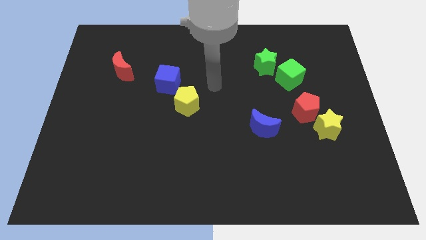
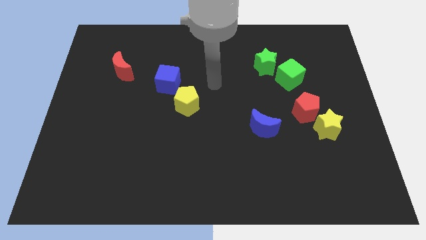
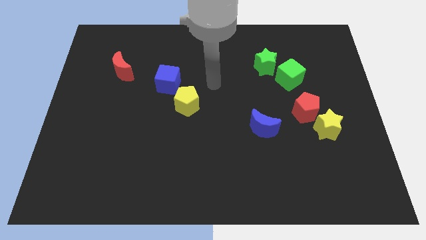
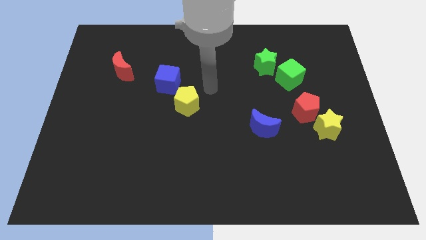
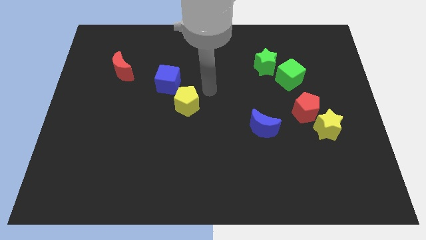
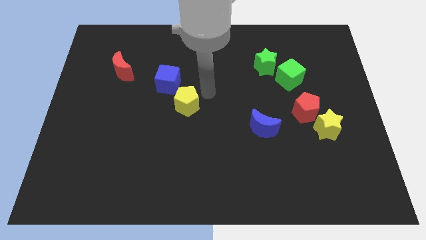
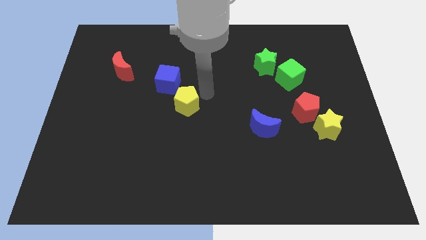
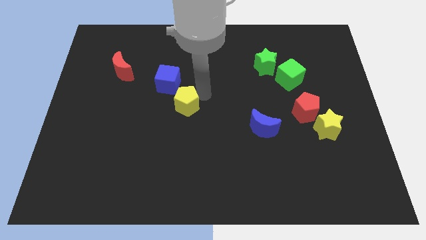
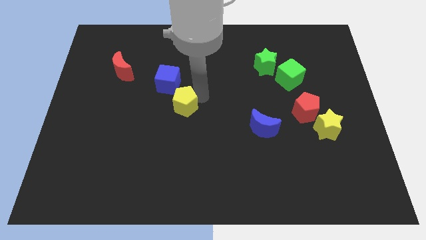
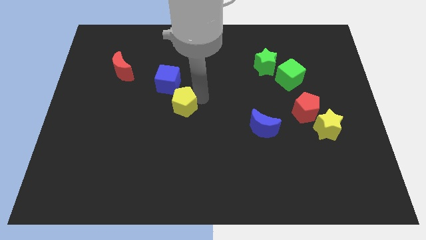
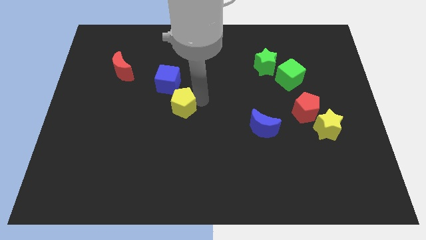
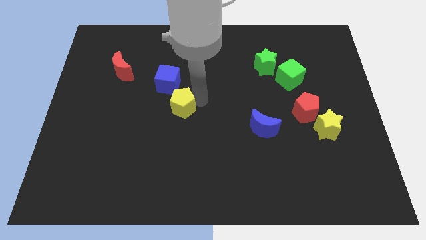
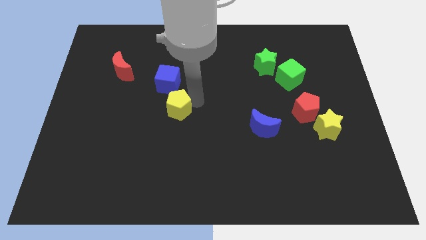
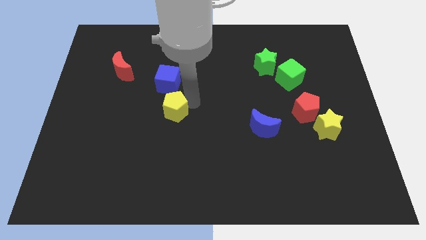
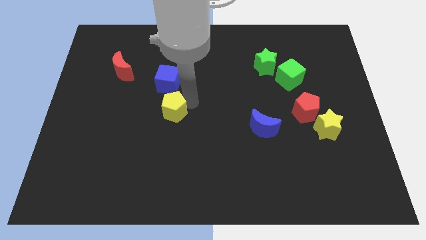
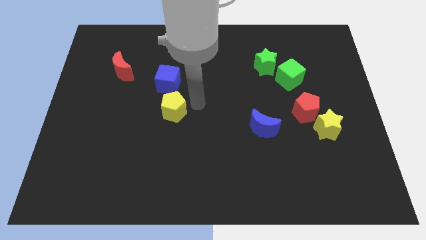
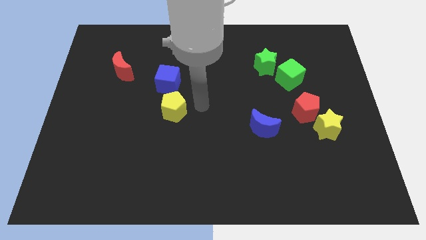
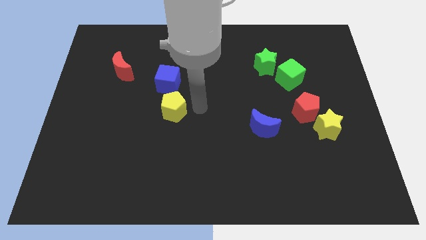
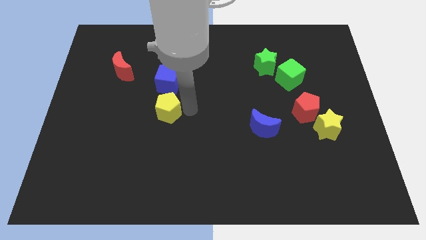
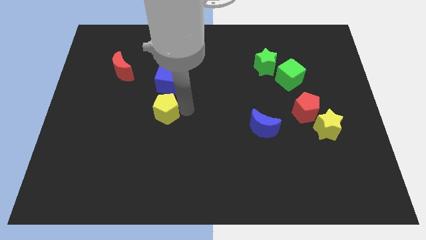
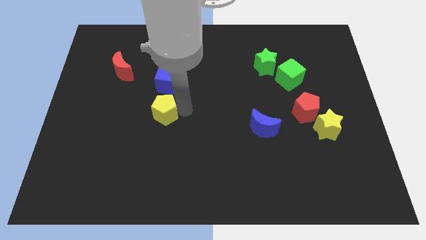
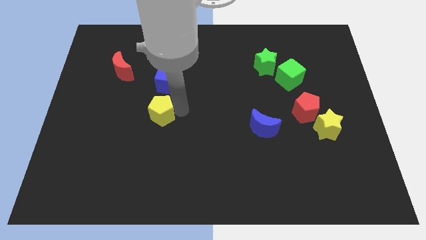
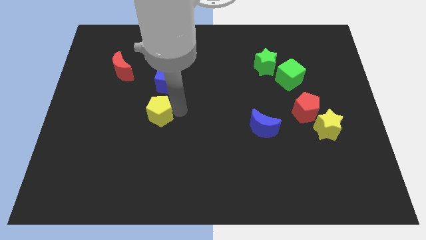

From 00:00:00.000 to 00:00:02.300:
move the yellow pentagon to the bottom of the blue cube

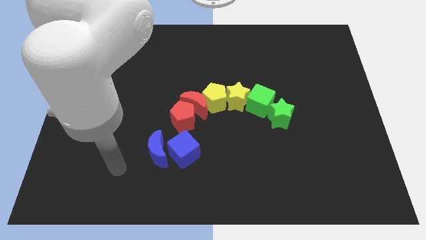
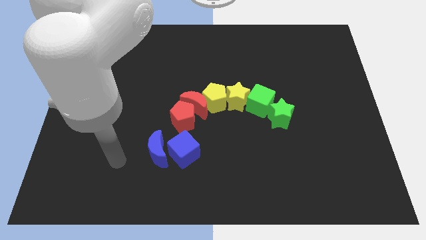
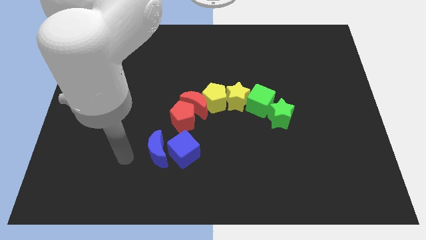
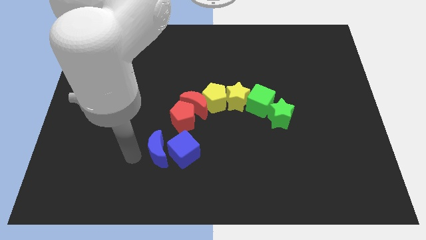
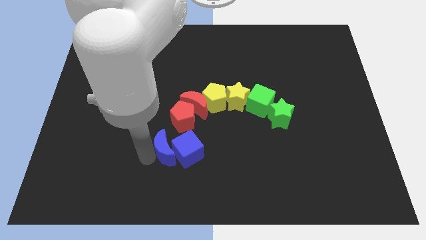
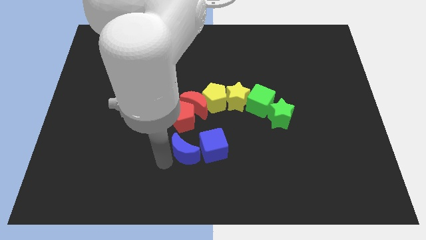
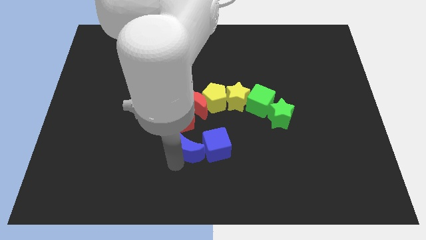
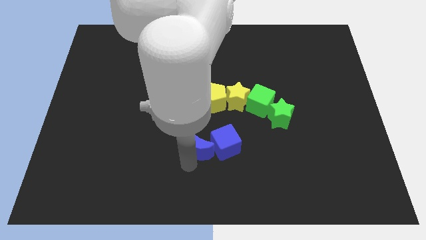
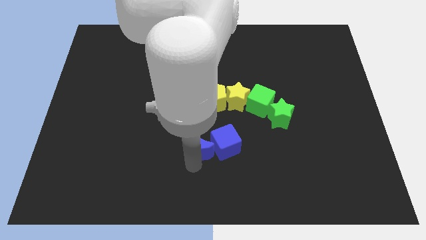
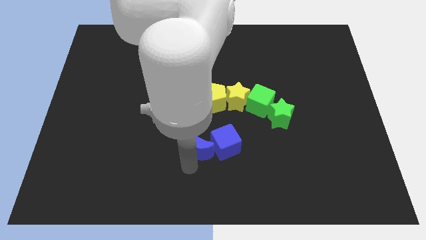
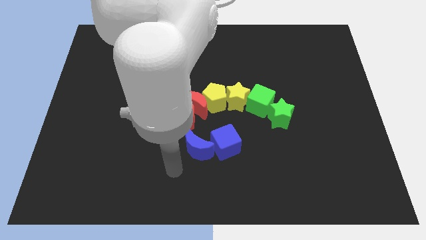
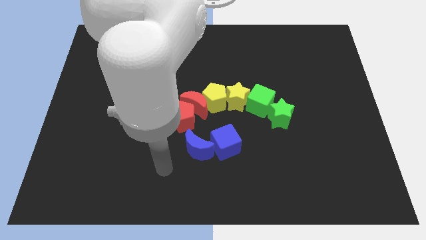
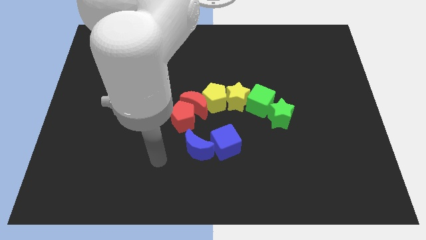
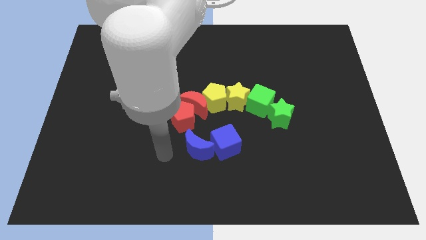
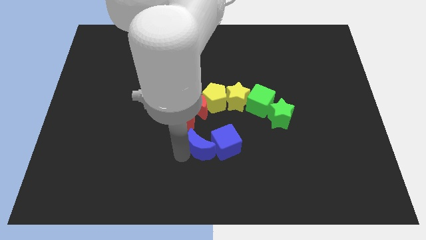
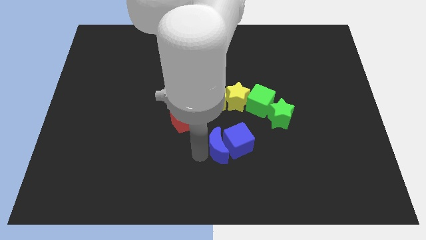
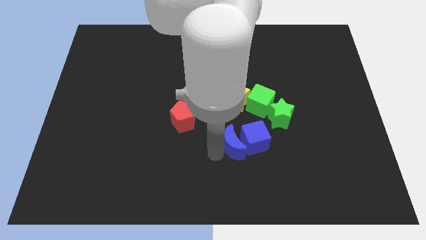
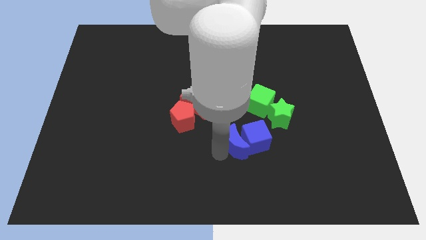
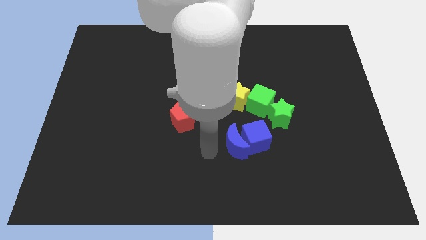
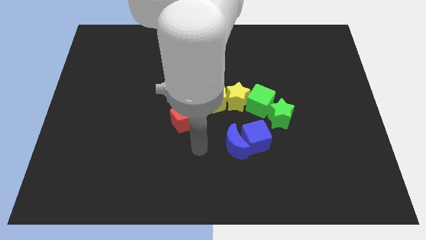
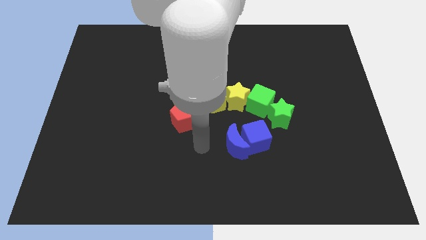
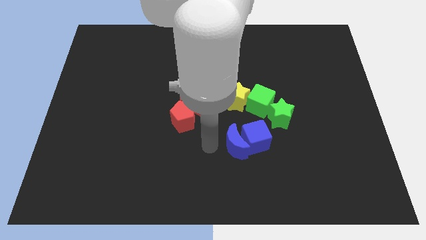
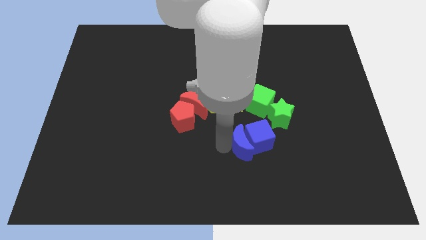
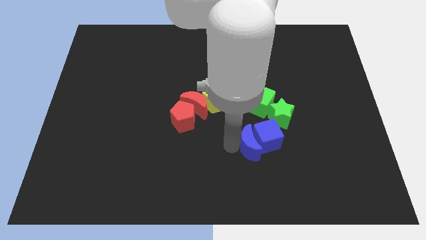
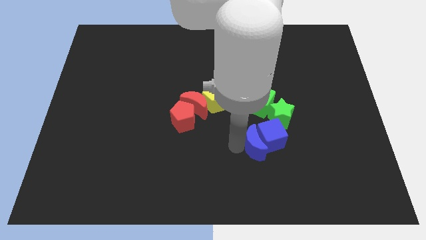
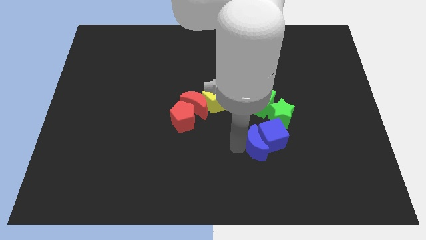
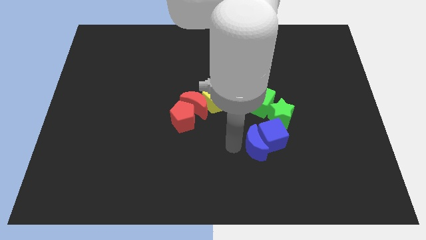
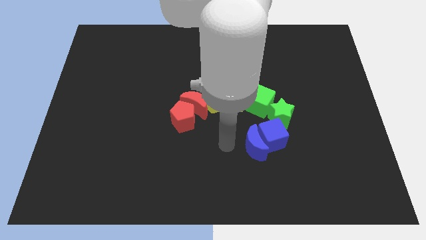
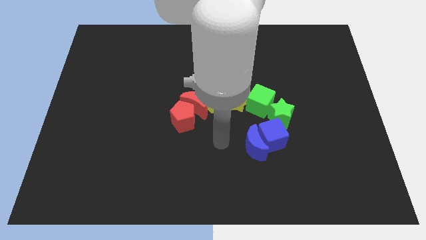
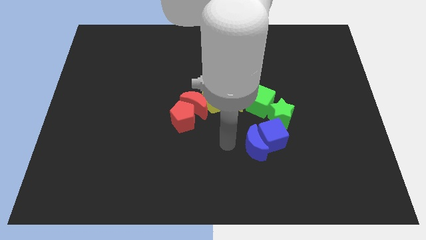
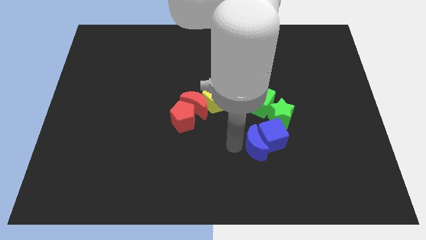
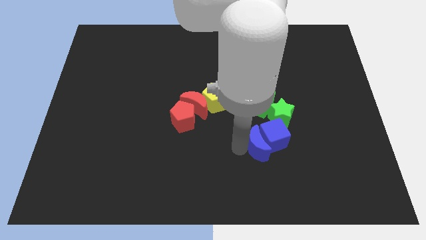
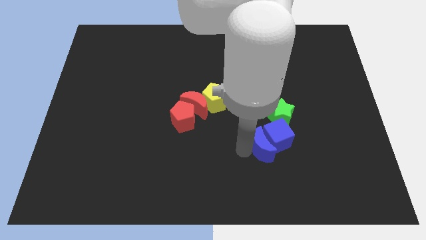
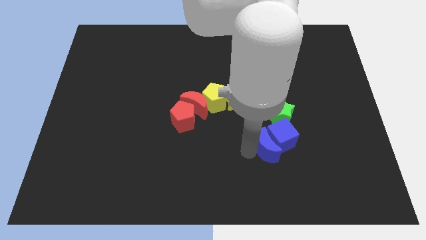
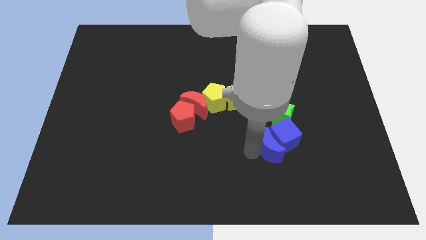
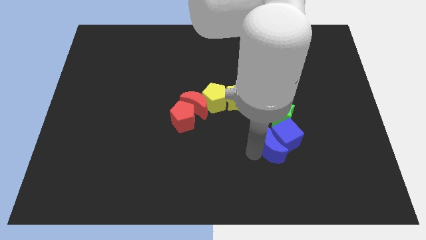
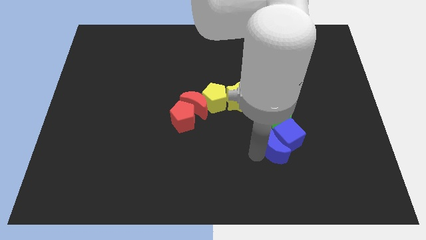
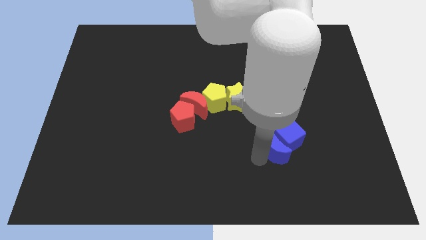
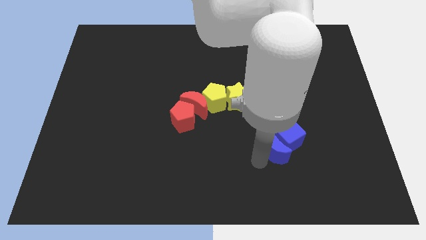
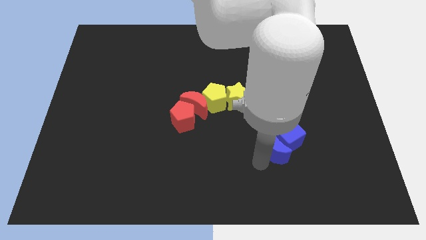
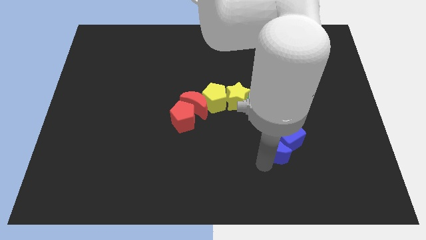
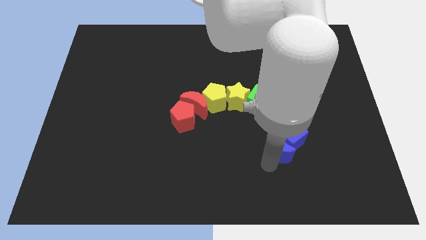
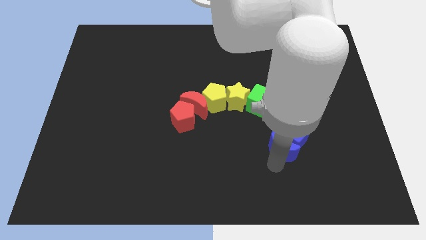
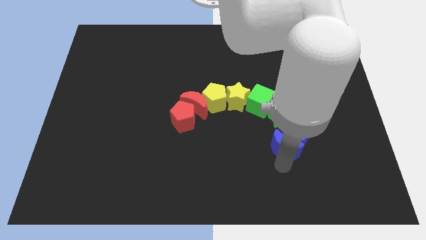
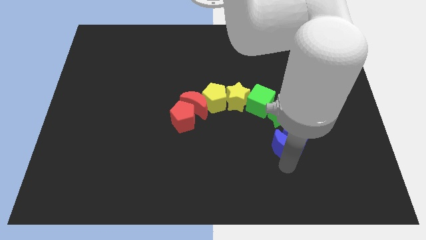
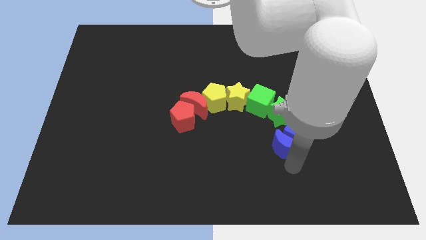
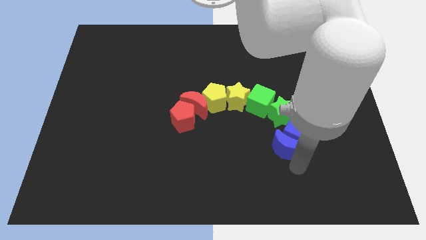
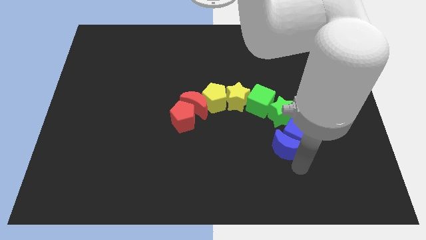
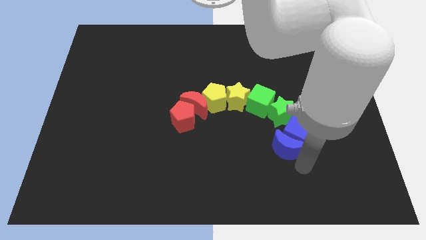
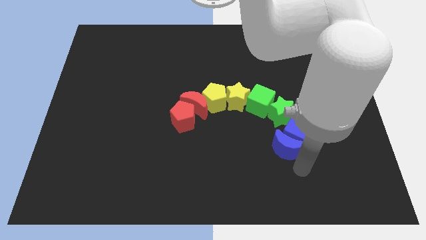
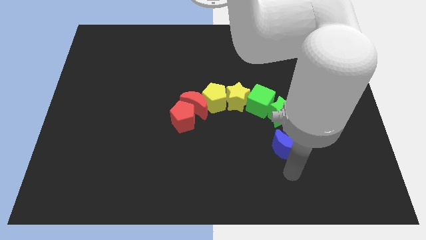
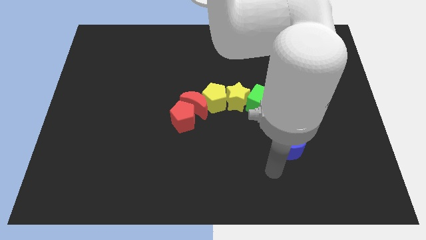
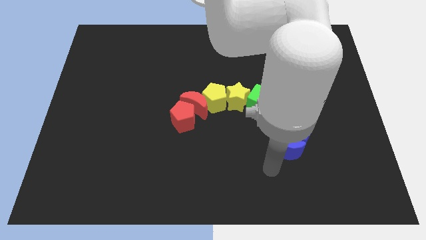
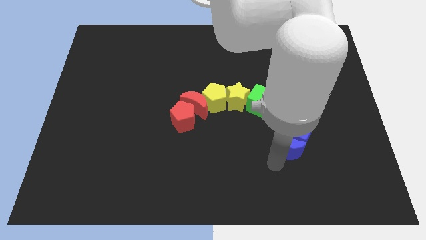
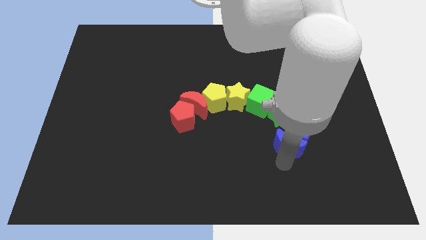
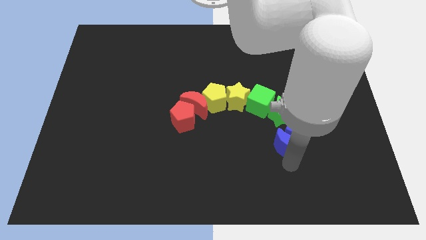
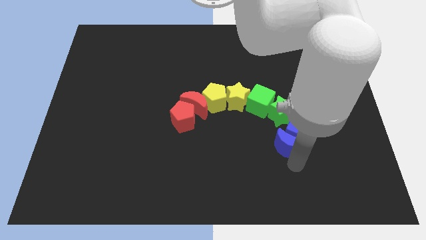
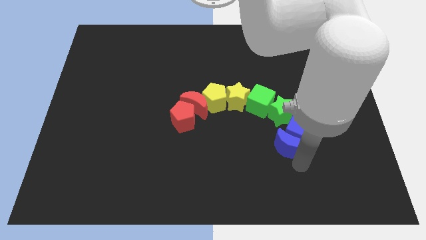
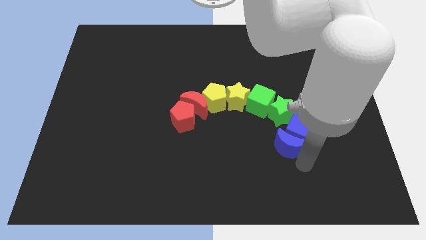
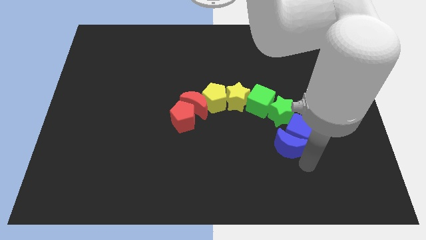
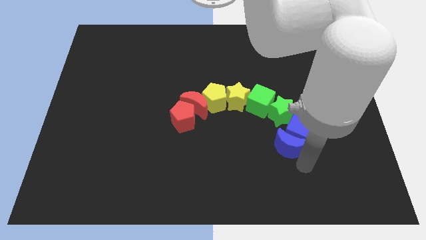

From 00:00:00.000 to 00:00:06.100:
move the blue cube and blue moon towards the green star

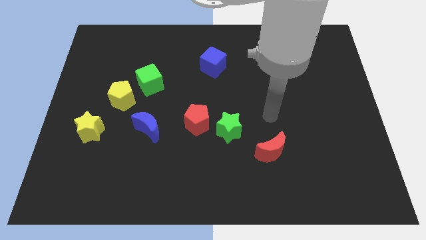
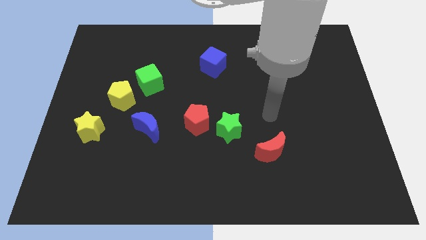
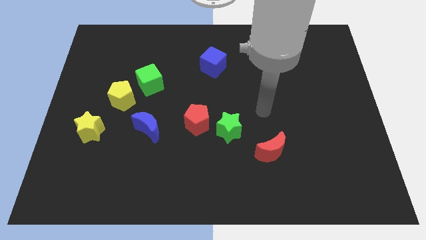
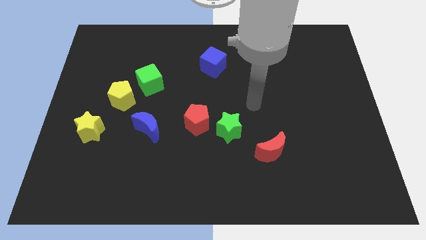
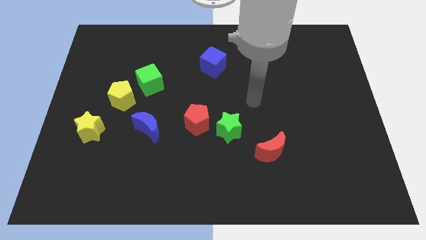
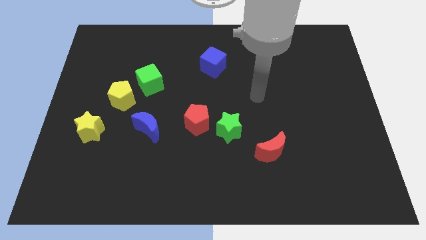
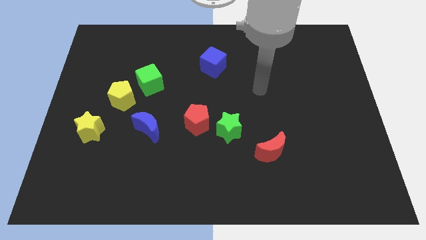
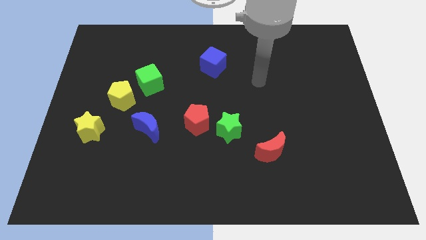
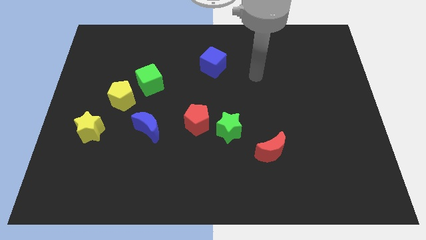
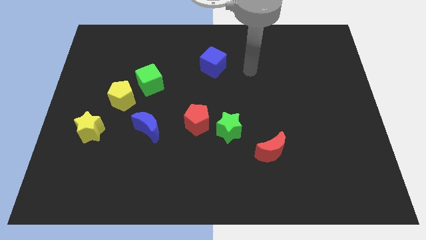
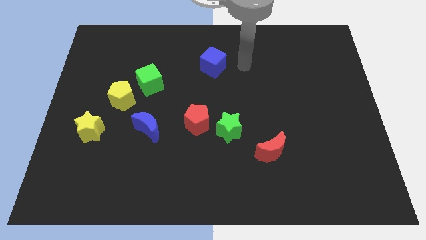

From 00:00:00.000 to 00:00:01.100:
move the arm towards the blue cube
